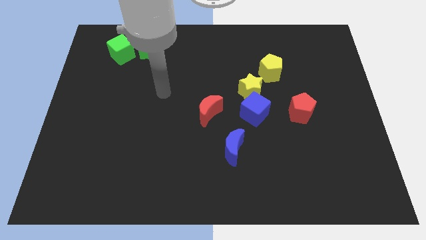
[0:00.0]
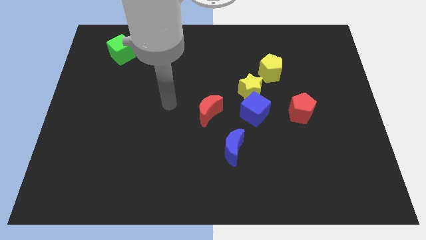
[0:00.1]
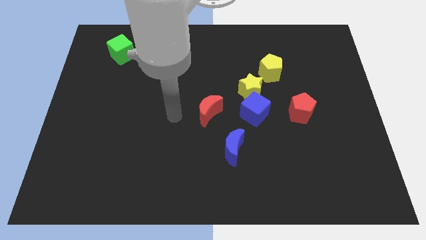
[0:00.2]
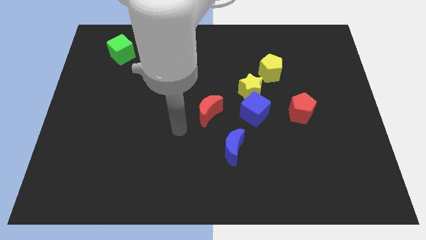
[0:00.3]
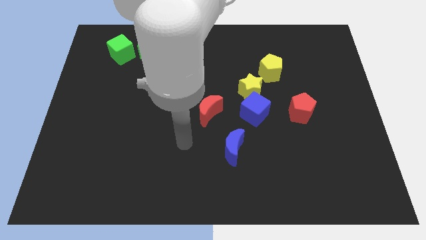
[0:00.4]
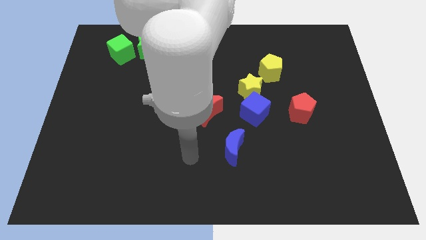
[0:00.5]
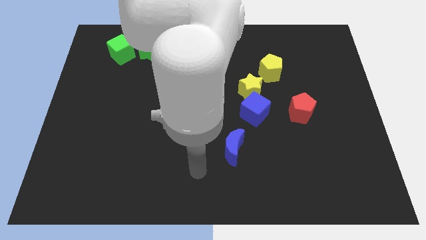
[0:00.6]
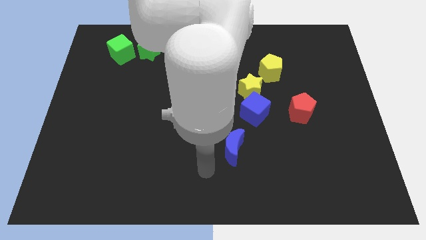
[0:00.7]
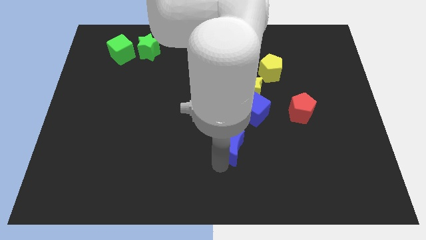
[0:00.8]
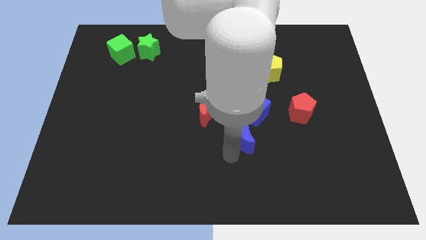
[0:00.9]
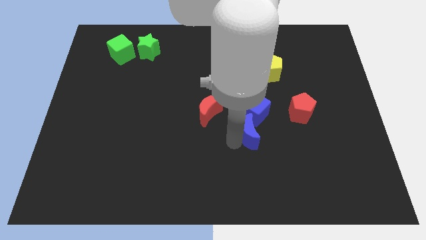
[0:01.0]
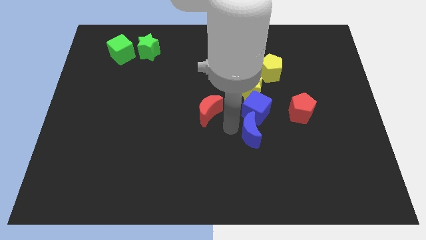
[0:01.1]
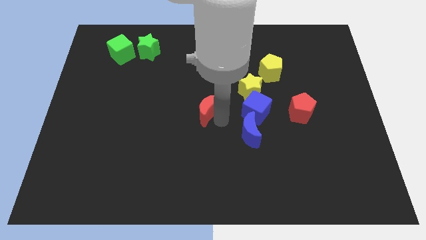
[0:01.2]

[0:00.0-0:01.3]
move the blue crescent to the bottom side of the blue cube

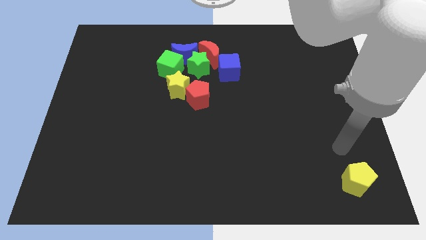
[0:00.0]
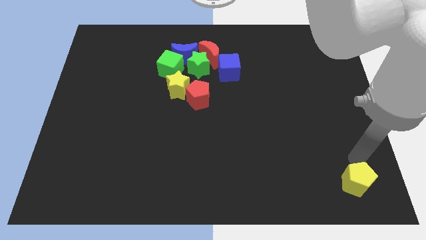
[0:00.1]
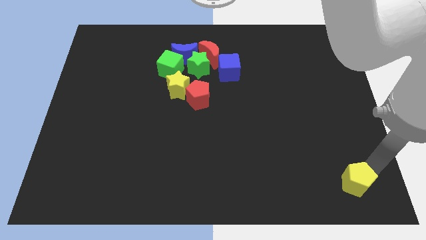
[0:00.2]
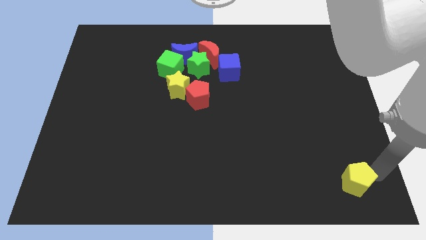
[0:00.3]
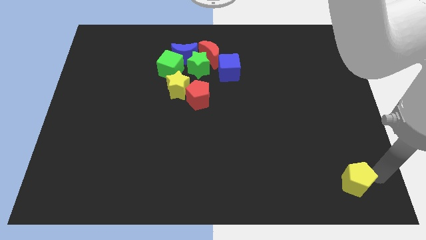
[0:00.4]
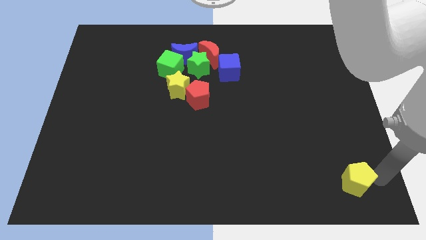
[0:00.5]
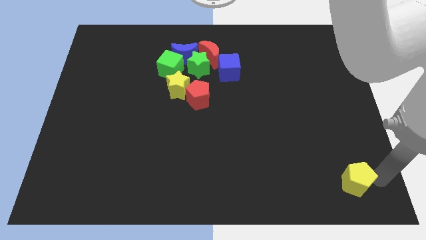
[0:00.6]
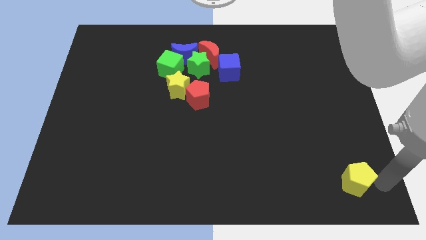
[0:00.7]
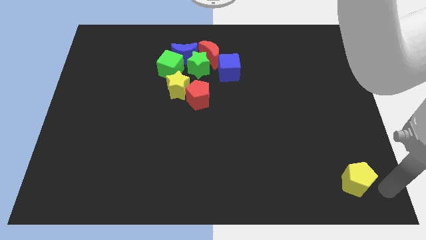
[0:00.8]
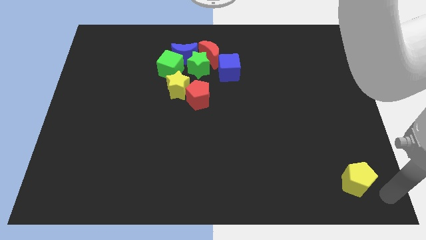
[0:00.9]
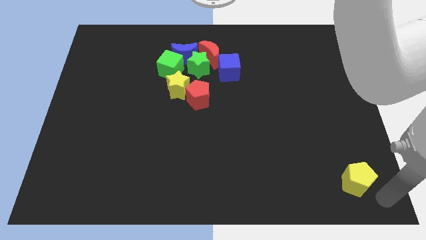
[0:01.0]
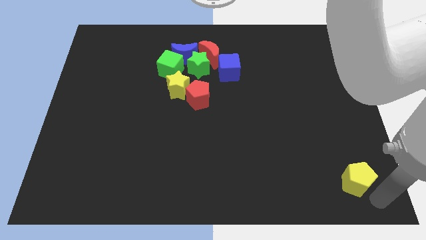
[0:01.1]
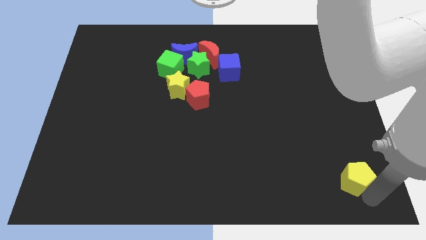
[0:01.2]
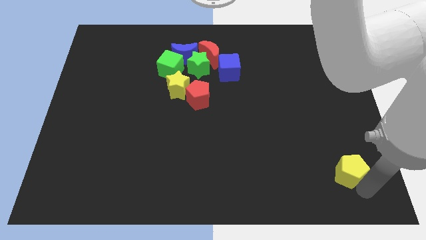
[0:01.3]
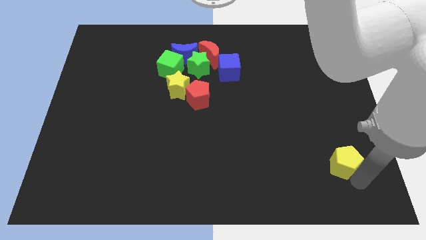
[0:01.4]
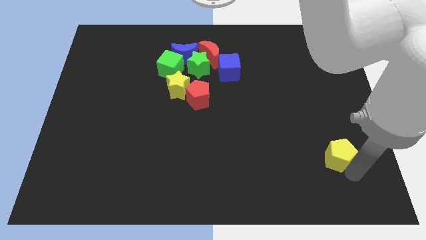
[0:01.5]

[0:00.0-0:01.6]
move your arm below the yellow pentagon

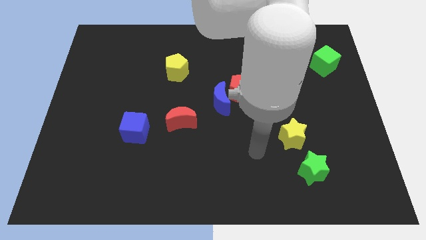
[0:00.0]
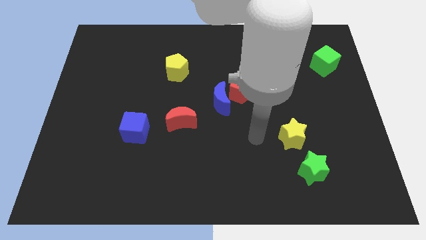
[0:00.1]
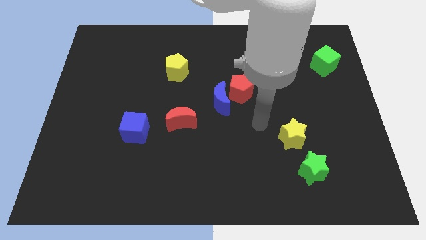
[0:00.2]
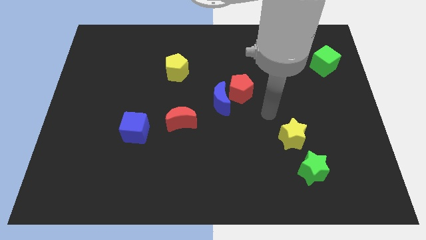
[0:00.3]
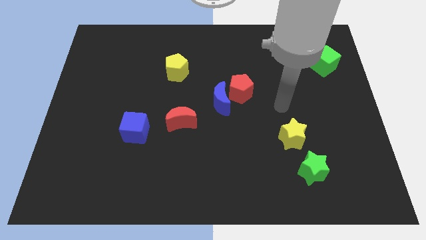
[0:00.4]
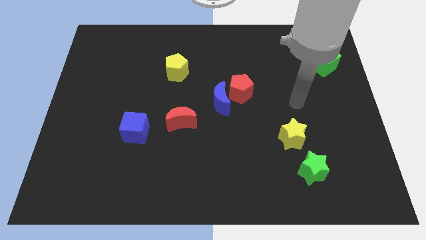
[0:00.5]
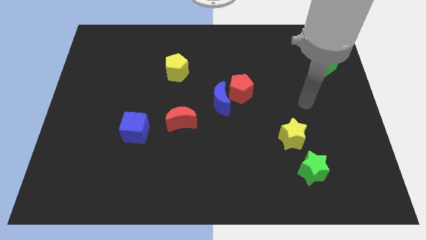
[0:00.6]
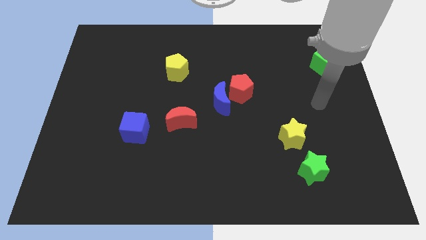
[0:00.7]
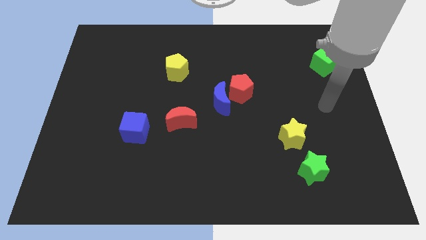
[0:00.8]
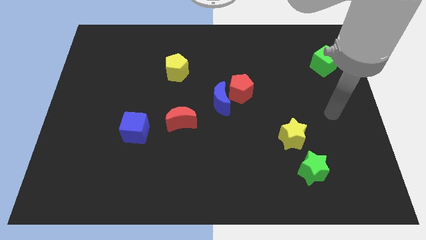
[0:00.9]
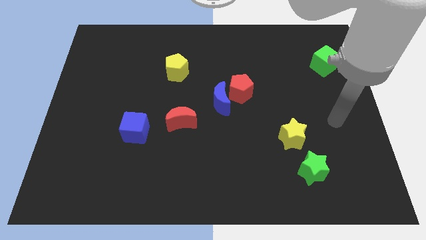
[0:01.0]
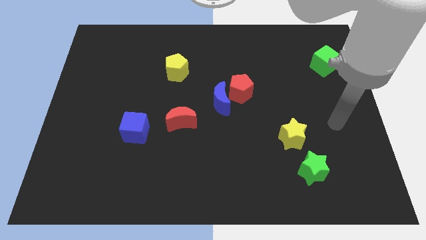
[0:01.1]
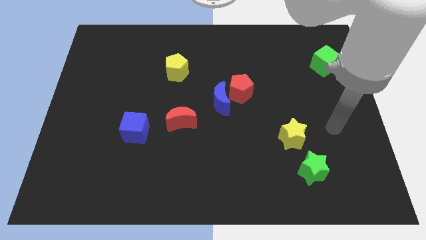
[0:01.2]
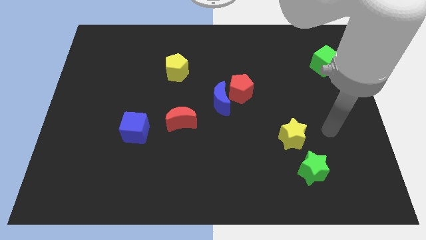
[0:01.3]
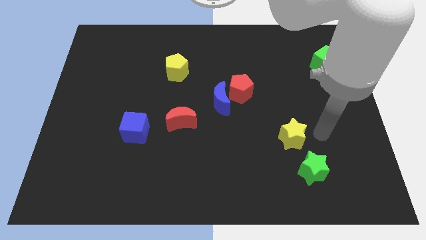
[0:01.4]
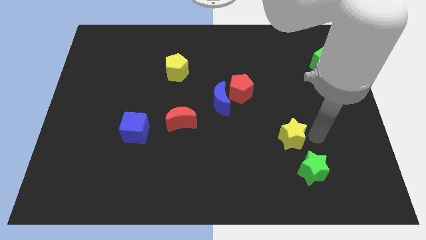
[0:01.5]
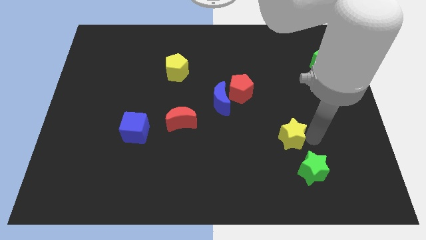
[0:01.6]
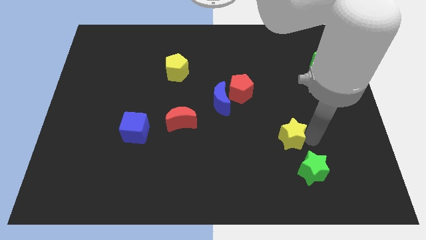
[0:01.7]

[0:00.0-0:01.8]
move your arm to the right of the yellow star

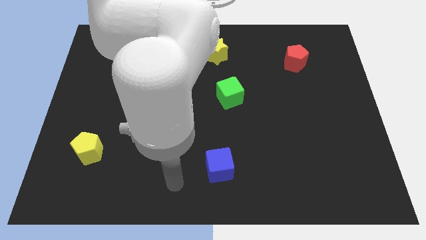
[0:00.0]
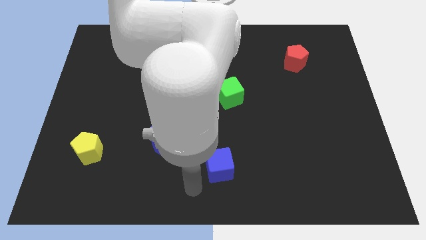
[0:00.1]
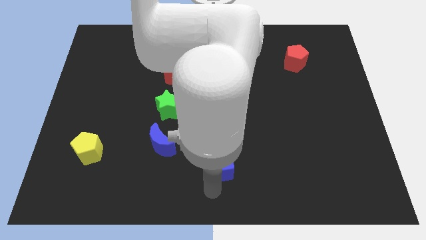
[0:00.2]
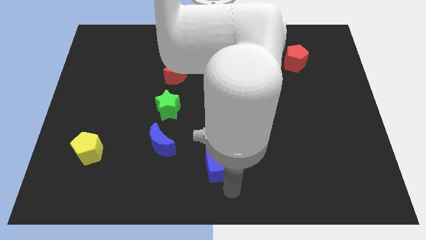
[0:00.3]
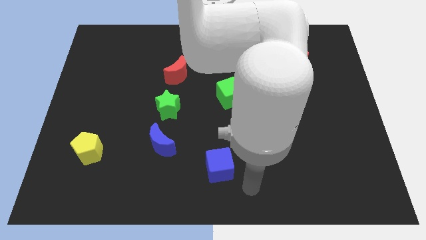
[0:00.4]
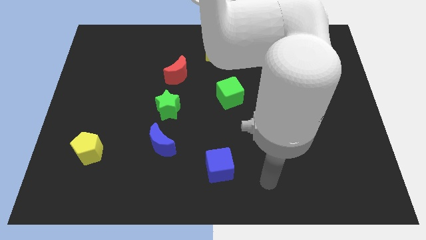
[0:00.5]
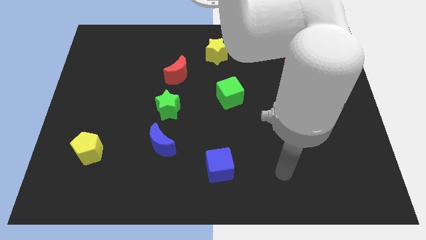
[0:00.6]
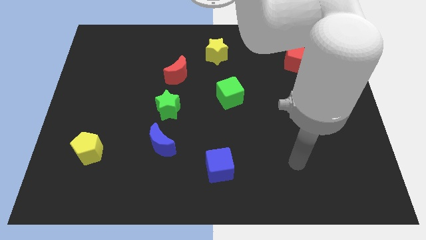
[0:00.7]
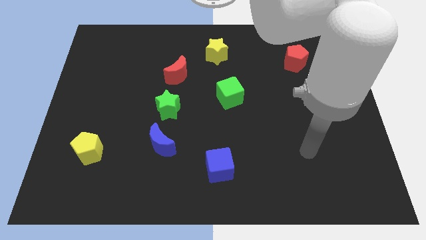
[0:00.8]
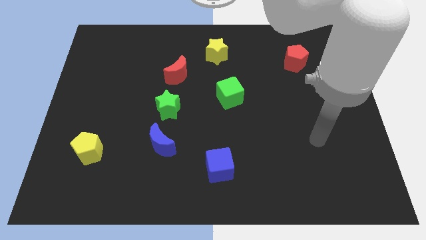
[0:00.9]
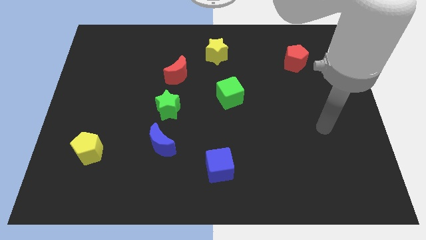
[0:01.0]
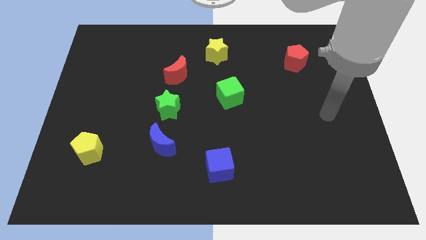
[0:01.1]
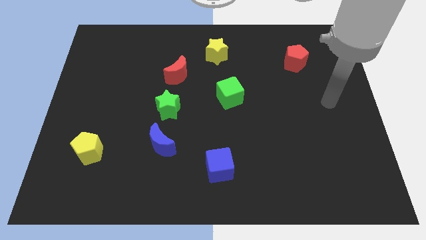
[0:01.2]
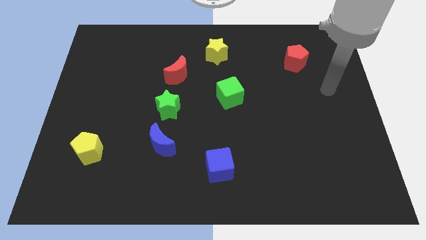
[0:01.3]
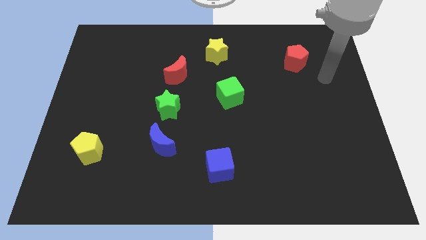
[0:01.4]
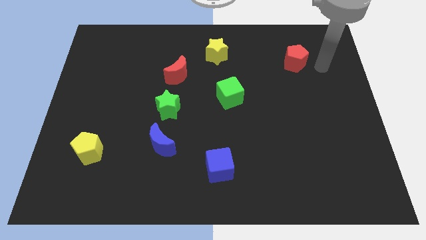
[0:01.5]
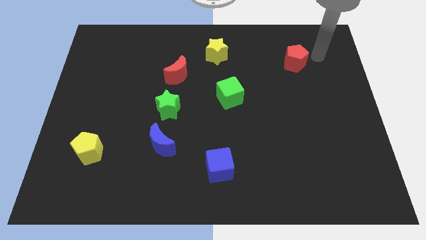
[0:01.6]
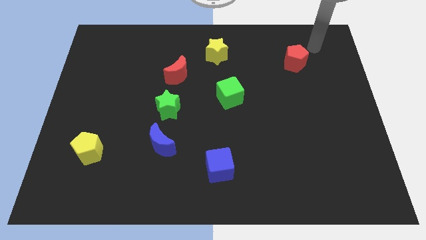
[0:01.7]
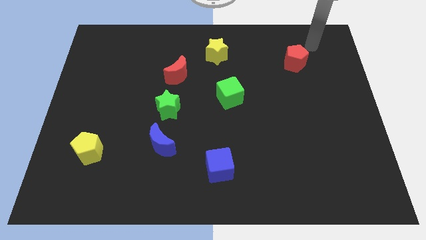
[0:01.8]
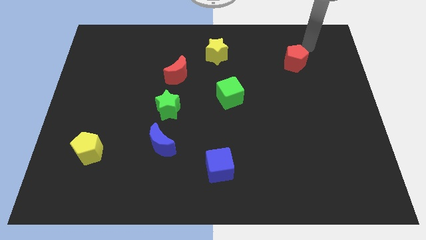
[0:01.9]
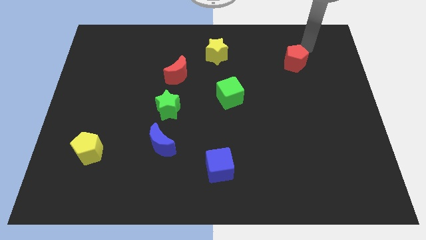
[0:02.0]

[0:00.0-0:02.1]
move your arm to the top of the red pentagon

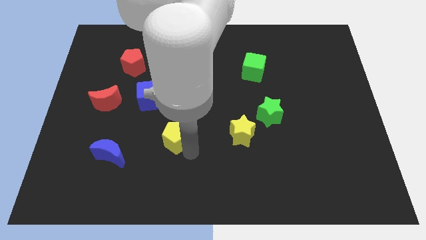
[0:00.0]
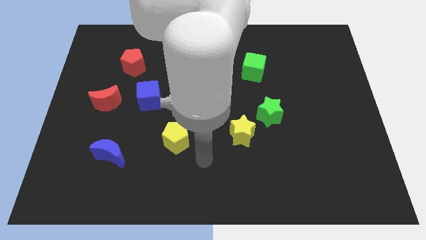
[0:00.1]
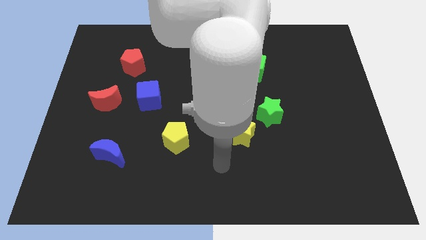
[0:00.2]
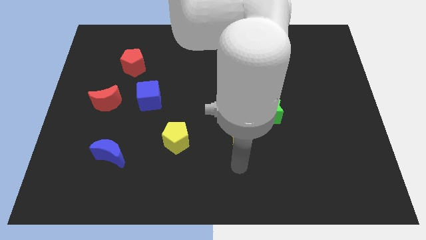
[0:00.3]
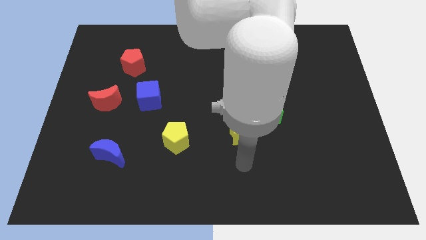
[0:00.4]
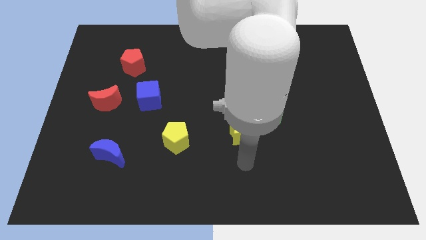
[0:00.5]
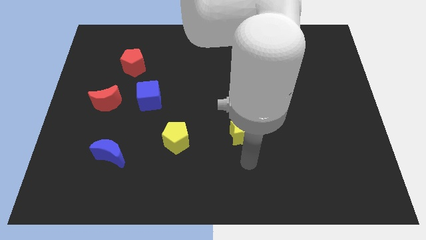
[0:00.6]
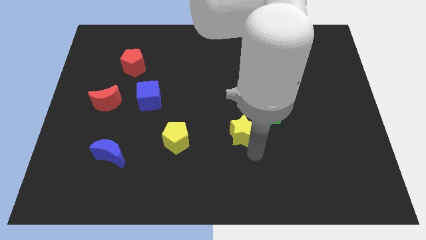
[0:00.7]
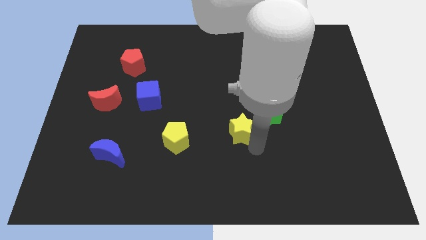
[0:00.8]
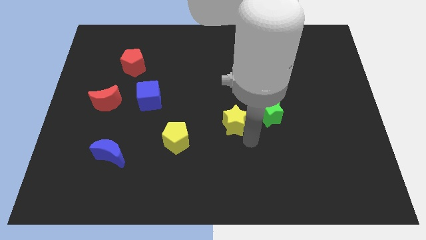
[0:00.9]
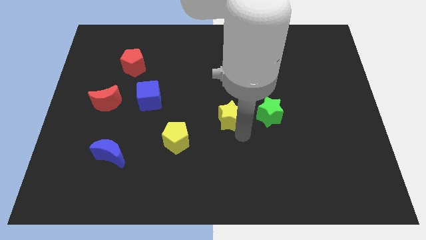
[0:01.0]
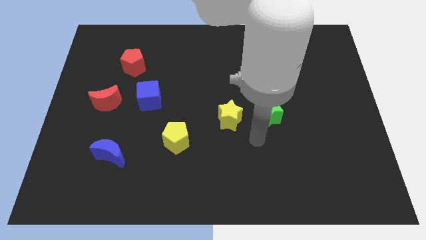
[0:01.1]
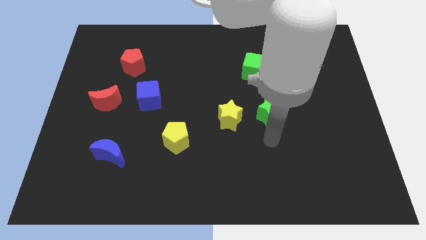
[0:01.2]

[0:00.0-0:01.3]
move the yellow star to the left of the green star

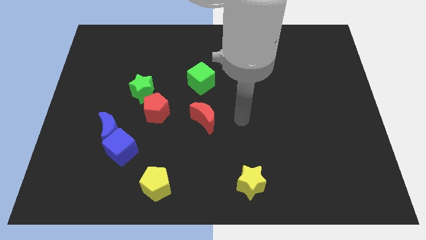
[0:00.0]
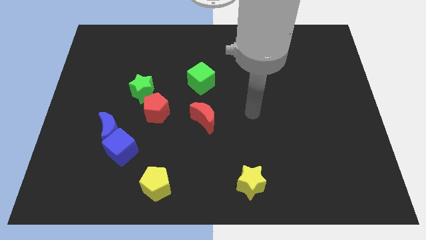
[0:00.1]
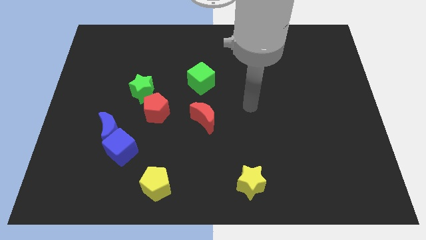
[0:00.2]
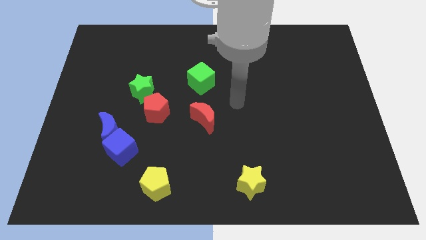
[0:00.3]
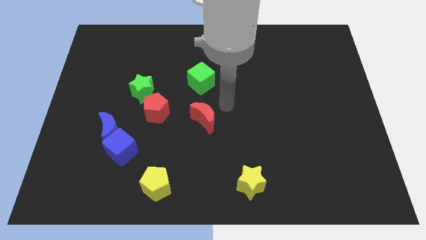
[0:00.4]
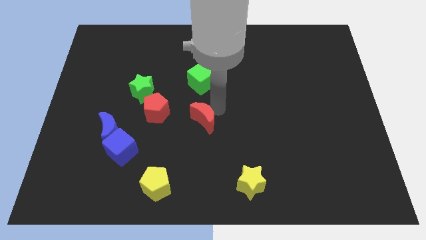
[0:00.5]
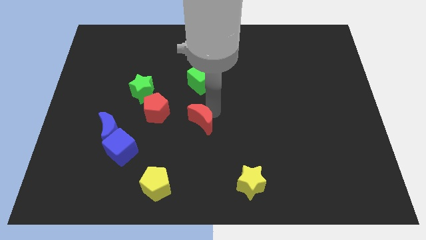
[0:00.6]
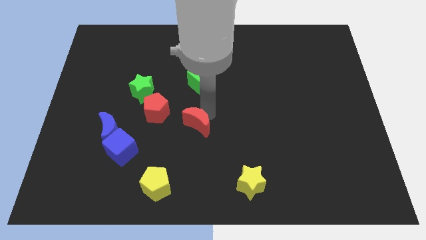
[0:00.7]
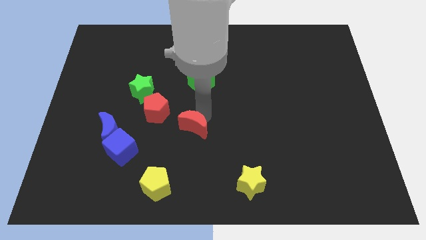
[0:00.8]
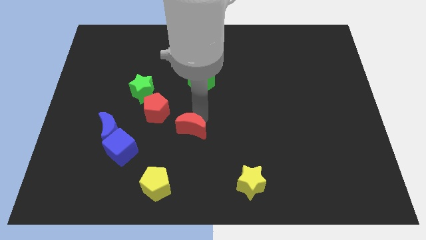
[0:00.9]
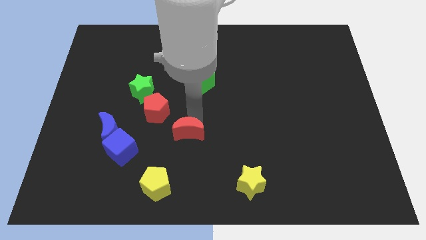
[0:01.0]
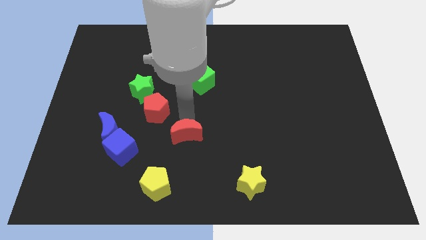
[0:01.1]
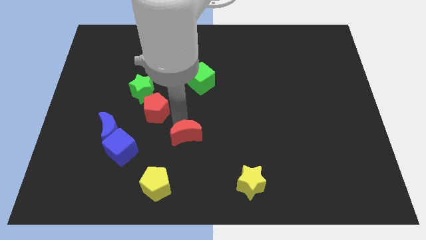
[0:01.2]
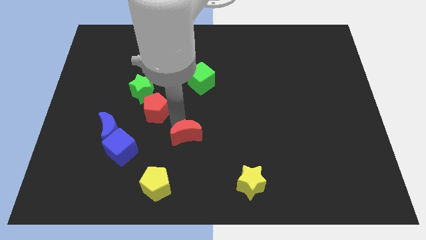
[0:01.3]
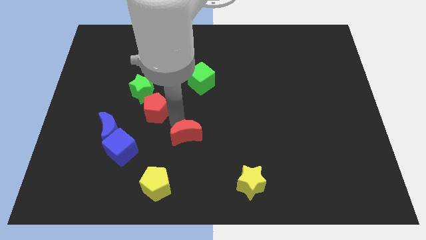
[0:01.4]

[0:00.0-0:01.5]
place the red crescent diagonally bottom right to the red pentagon
